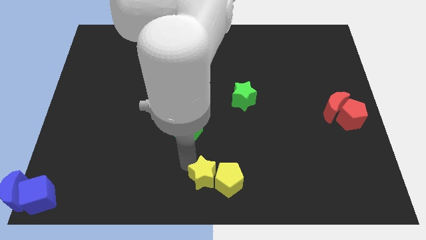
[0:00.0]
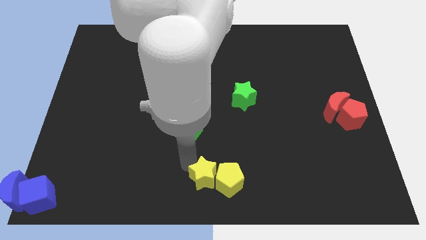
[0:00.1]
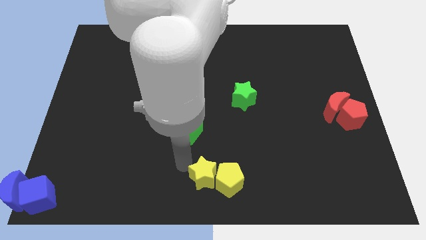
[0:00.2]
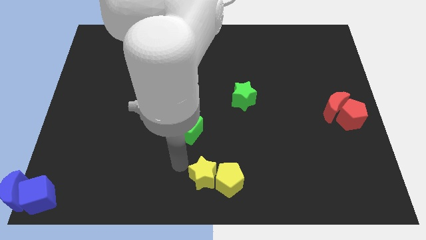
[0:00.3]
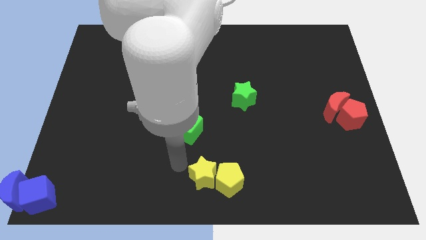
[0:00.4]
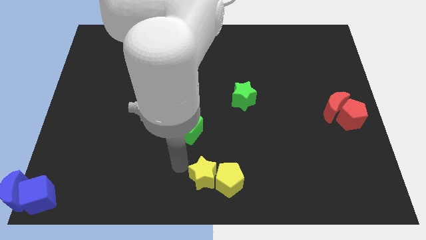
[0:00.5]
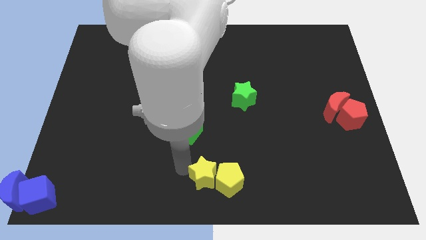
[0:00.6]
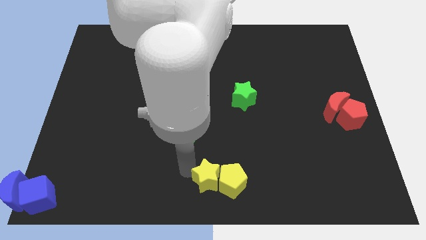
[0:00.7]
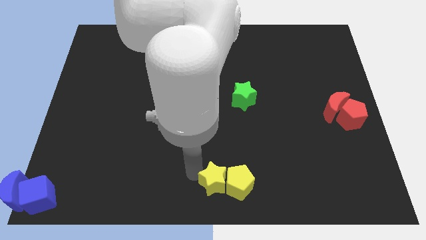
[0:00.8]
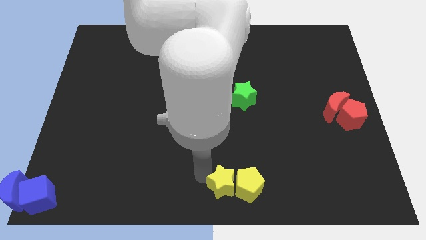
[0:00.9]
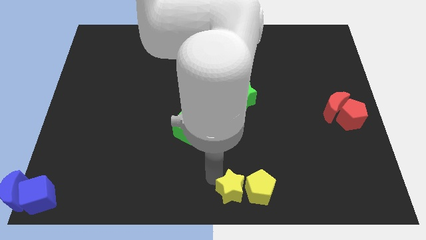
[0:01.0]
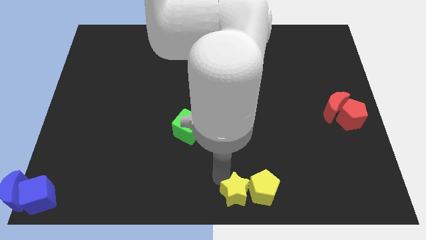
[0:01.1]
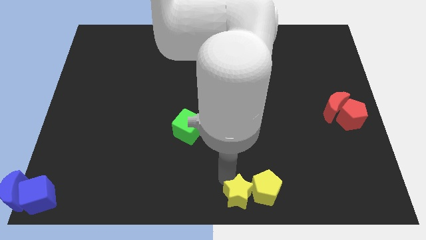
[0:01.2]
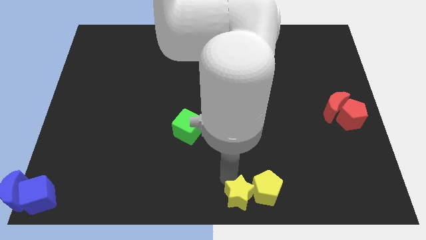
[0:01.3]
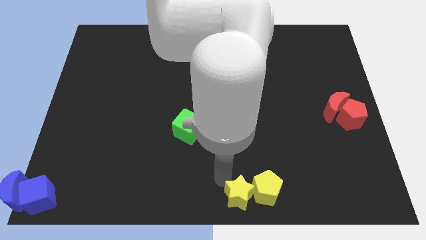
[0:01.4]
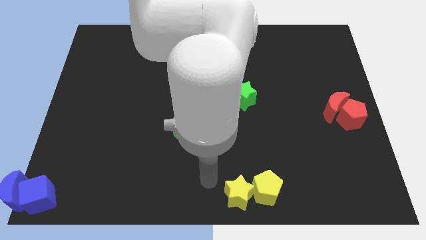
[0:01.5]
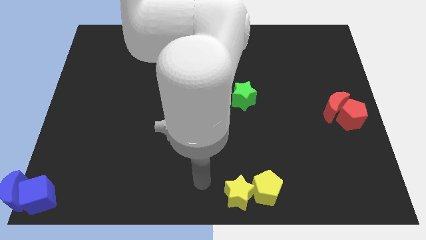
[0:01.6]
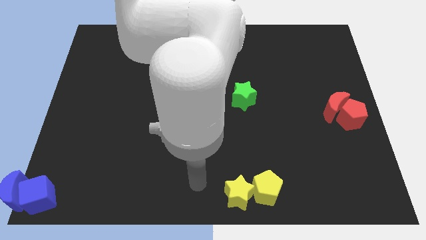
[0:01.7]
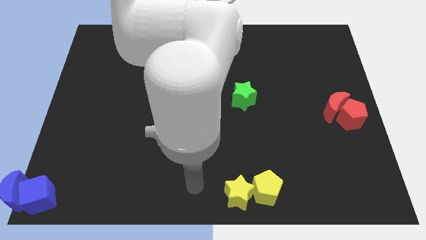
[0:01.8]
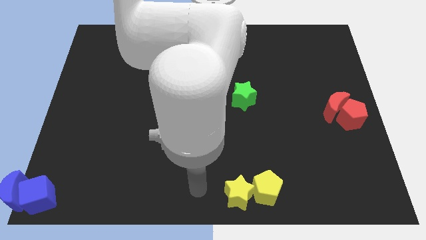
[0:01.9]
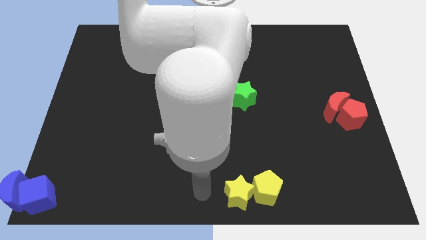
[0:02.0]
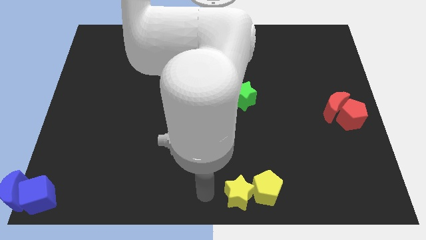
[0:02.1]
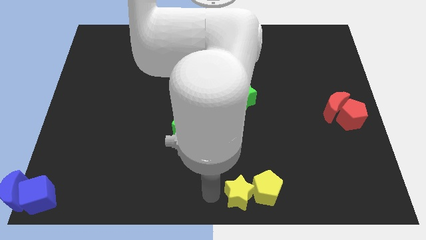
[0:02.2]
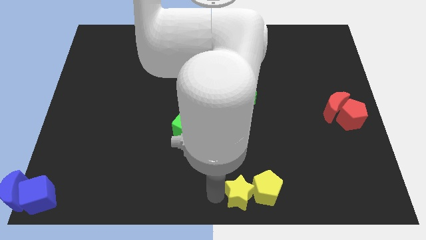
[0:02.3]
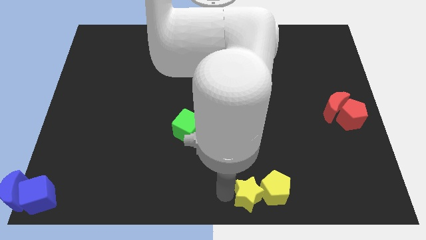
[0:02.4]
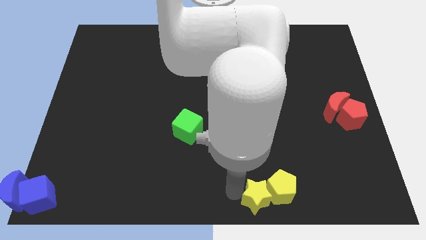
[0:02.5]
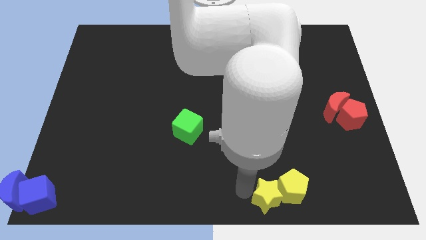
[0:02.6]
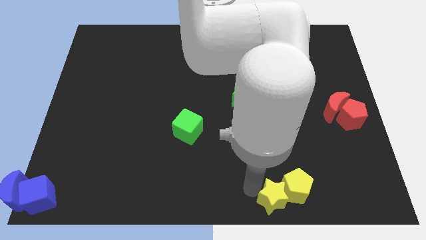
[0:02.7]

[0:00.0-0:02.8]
move the yellow blocks slightly to the right

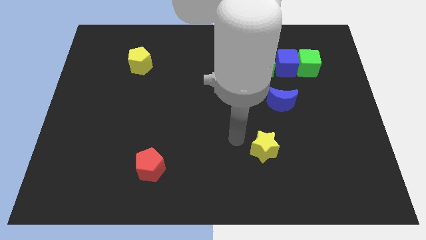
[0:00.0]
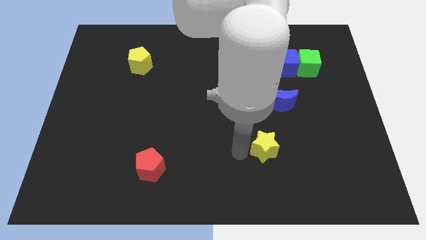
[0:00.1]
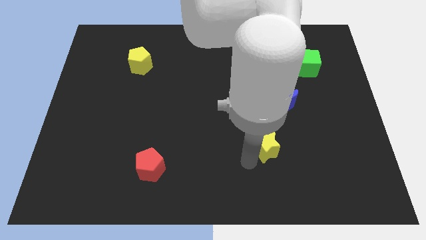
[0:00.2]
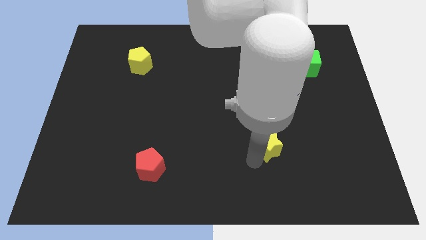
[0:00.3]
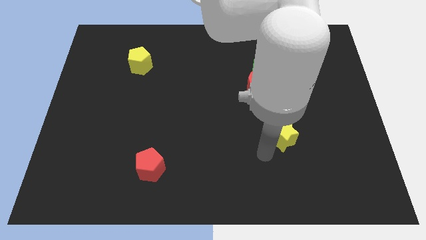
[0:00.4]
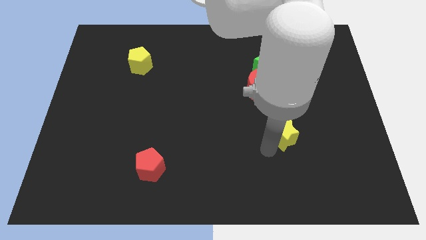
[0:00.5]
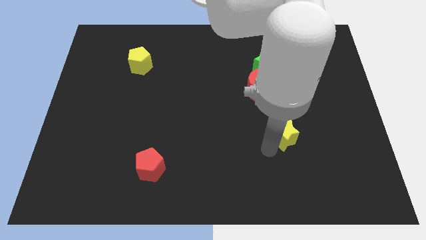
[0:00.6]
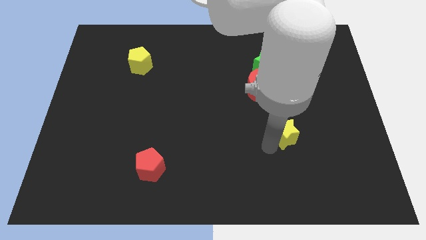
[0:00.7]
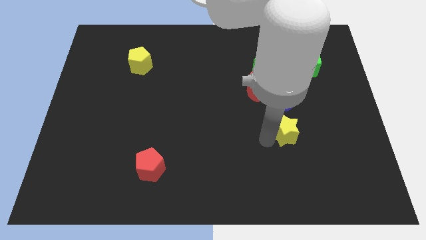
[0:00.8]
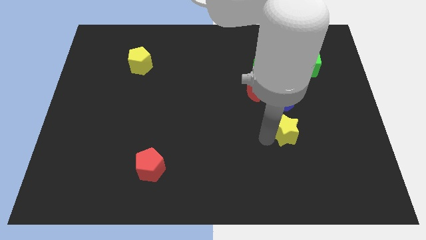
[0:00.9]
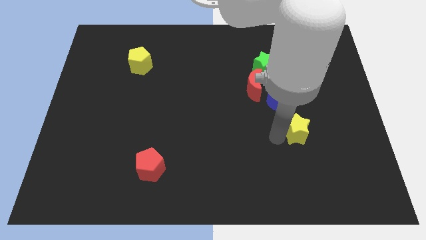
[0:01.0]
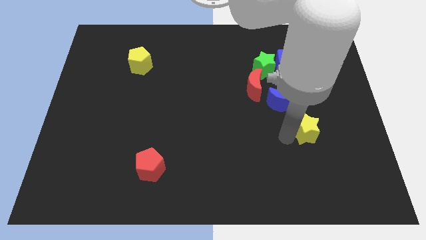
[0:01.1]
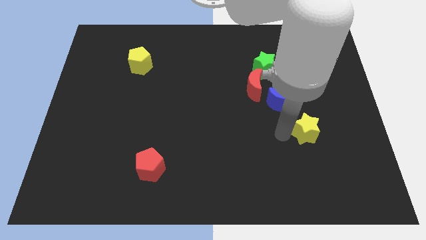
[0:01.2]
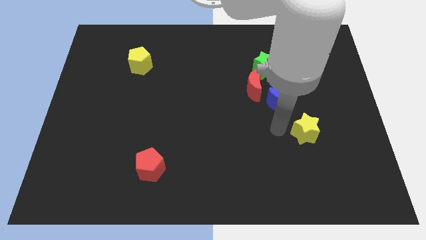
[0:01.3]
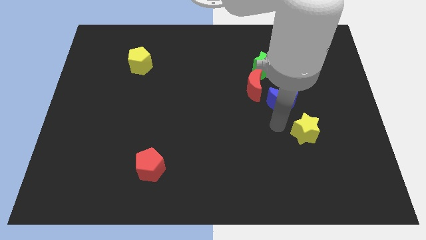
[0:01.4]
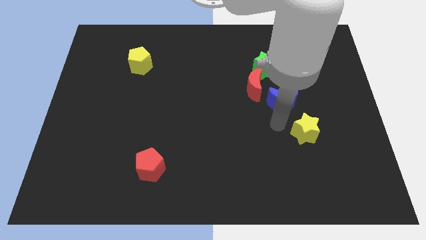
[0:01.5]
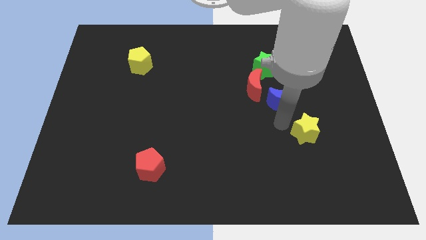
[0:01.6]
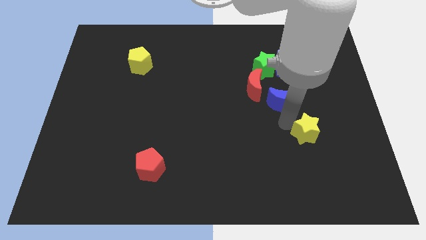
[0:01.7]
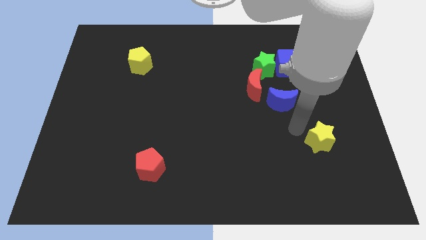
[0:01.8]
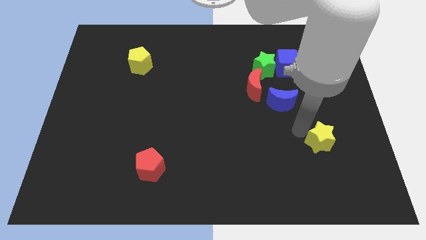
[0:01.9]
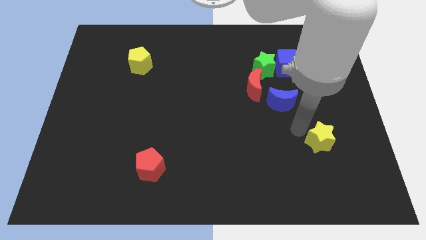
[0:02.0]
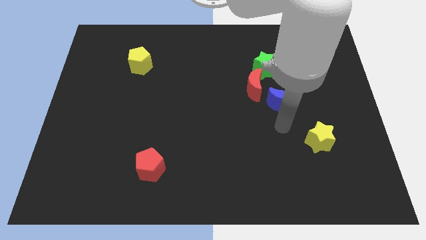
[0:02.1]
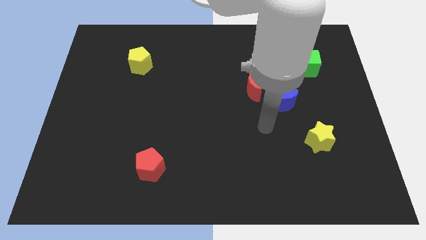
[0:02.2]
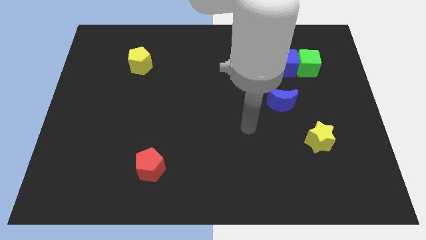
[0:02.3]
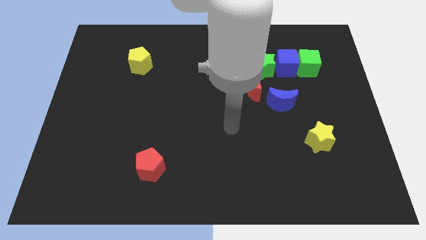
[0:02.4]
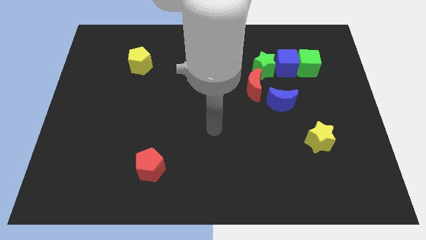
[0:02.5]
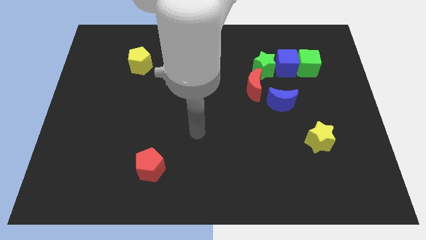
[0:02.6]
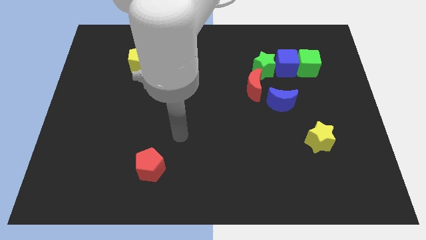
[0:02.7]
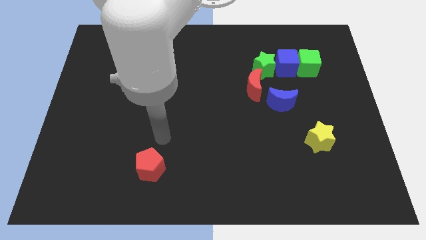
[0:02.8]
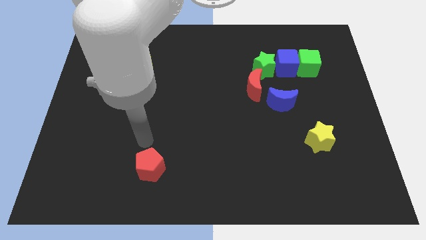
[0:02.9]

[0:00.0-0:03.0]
move the yellow star to the bottom right of the blue crescent on the board

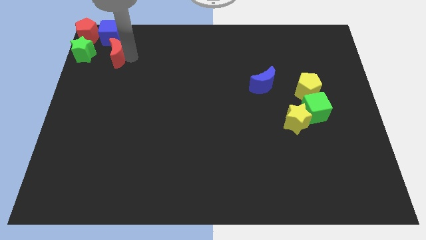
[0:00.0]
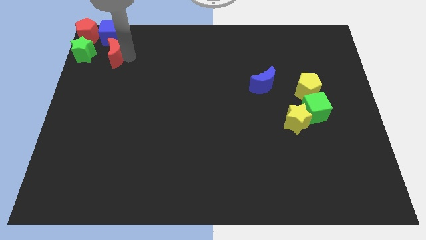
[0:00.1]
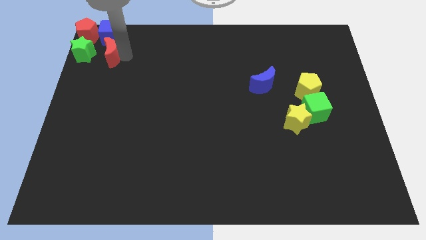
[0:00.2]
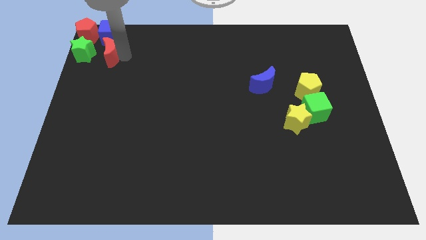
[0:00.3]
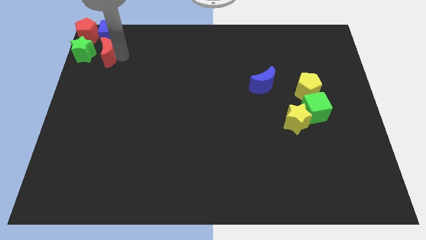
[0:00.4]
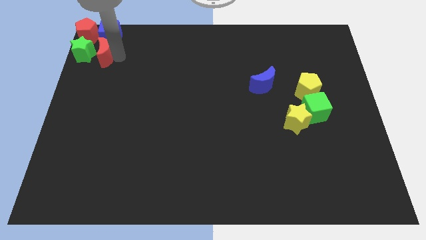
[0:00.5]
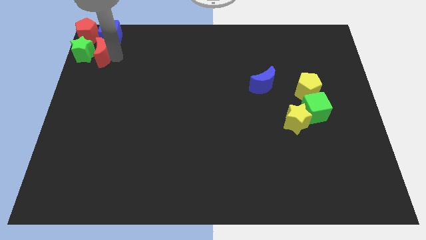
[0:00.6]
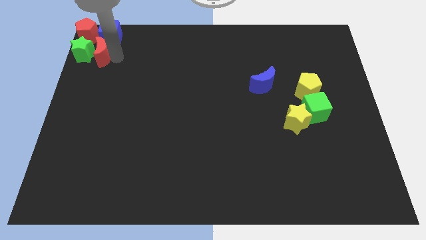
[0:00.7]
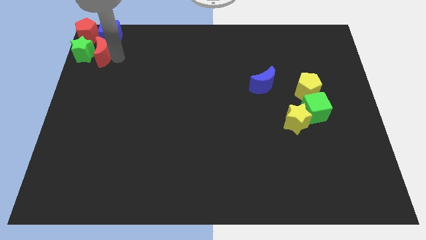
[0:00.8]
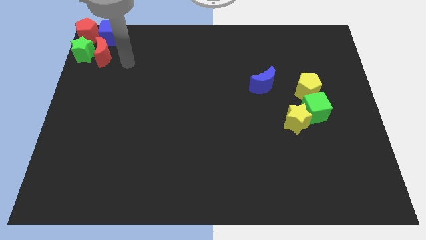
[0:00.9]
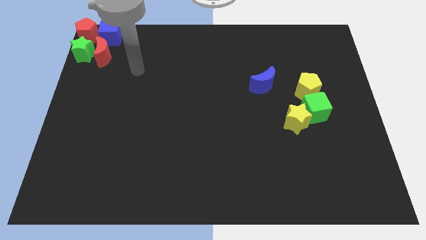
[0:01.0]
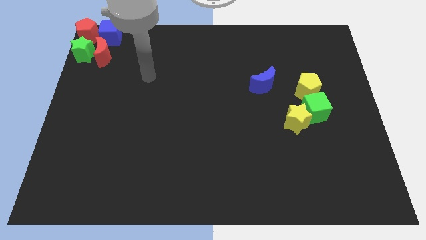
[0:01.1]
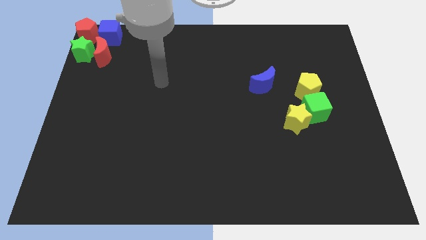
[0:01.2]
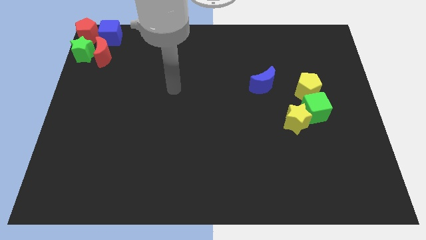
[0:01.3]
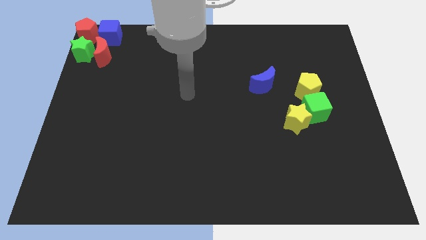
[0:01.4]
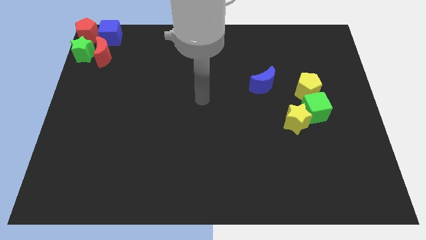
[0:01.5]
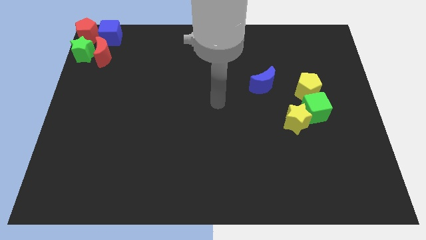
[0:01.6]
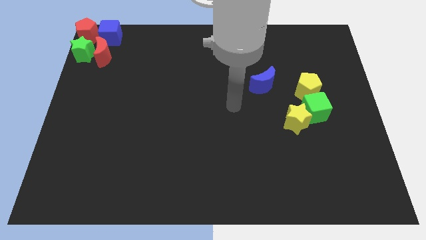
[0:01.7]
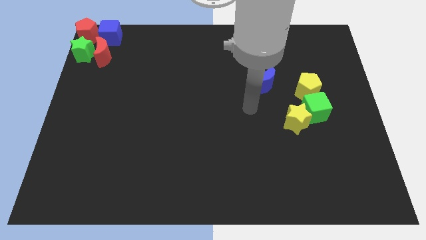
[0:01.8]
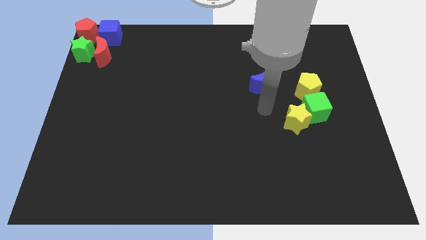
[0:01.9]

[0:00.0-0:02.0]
place the red moon below the blue cube

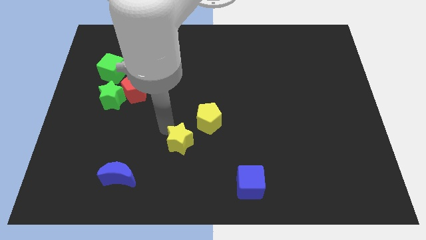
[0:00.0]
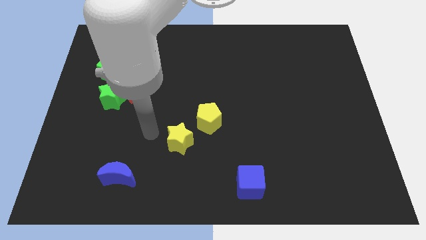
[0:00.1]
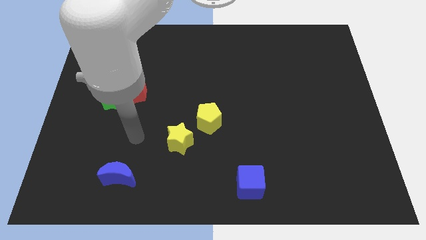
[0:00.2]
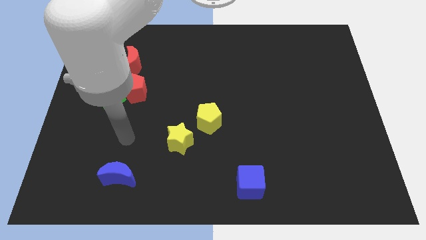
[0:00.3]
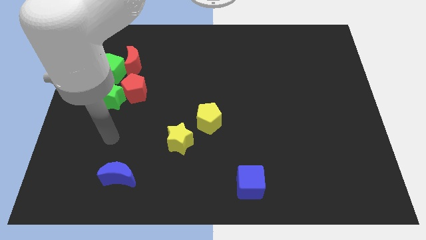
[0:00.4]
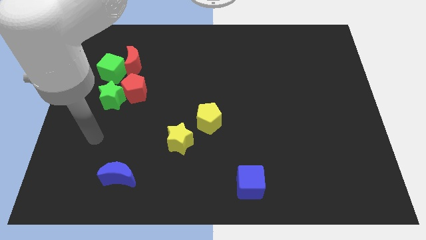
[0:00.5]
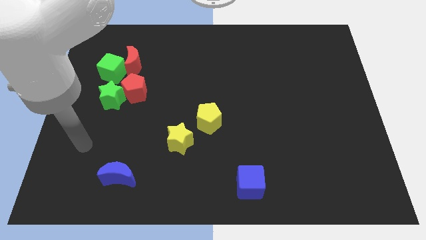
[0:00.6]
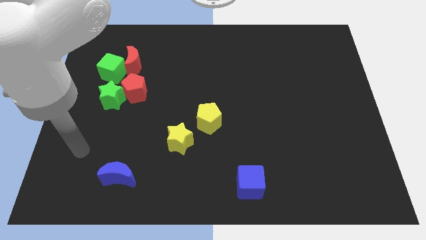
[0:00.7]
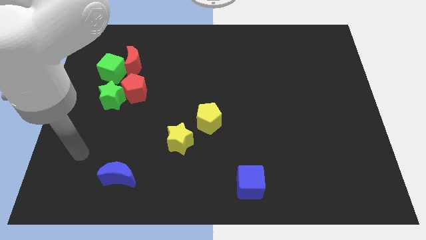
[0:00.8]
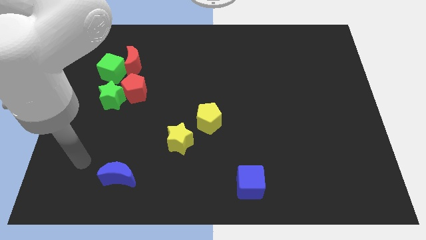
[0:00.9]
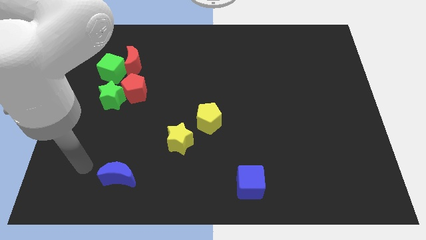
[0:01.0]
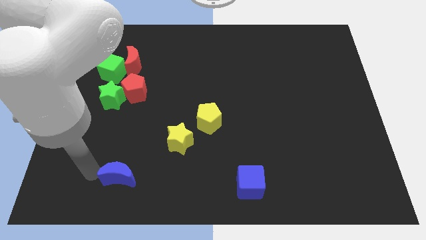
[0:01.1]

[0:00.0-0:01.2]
move your arm to the left of blue moon
